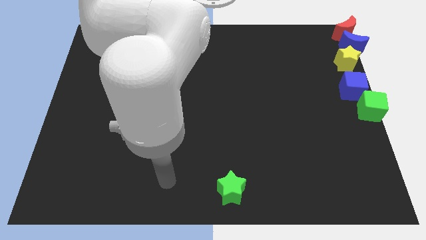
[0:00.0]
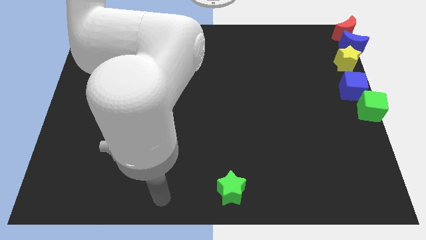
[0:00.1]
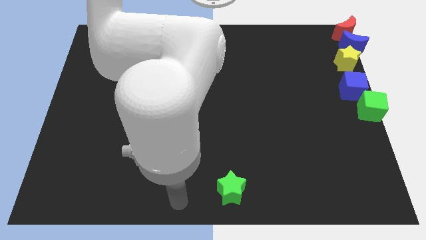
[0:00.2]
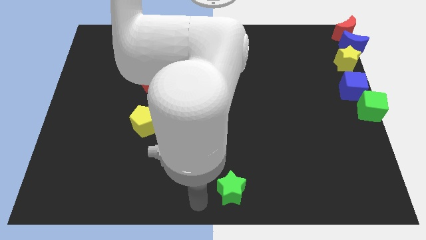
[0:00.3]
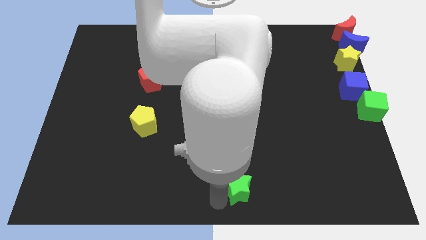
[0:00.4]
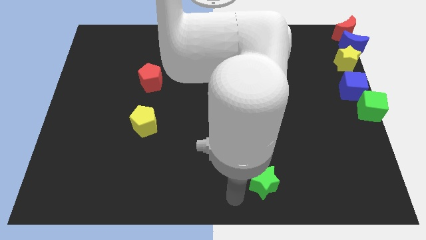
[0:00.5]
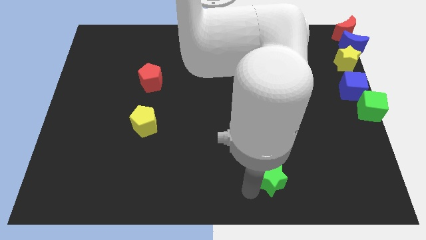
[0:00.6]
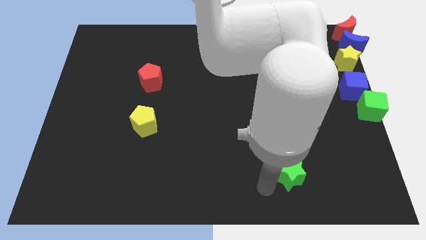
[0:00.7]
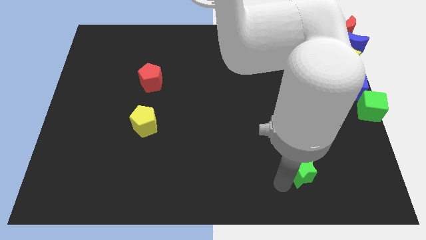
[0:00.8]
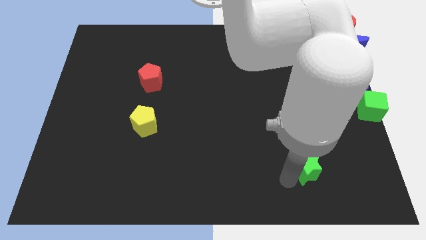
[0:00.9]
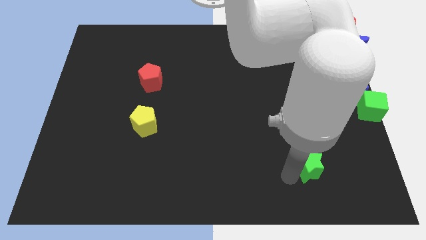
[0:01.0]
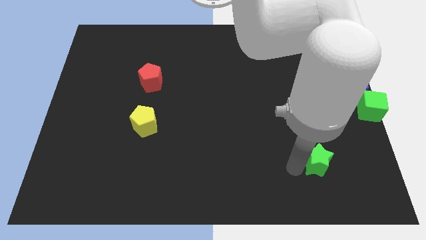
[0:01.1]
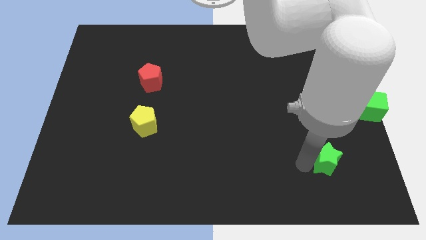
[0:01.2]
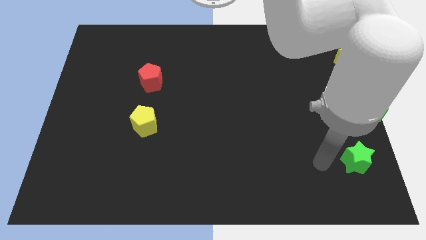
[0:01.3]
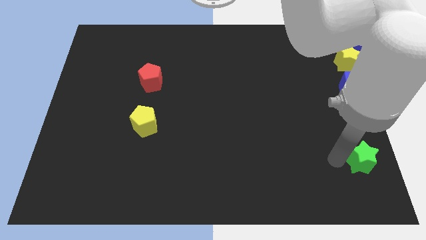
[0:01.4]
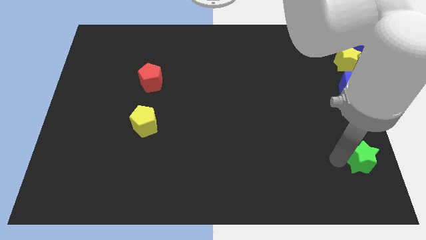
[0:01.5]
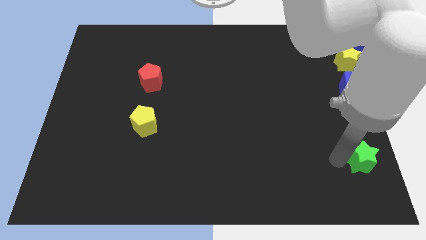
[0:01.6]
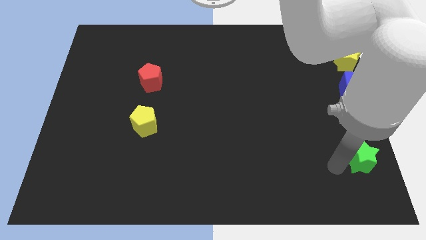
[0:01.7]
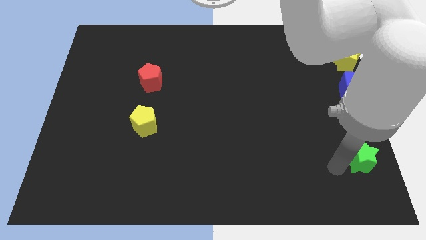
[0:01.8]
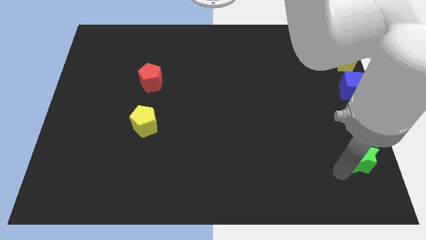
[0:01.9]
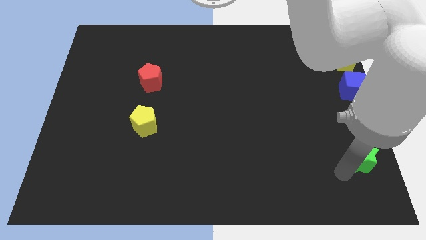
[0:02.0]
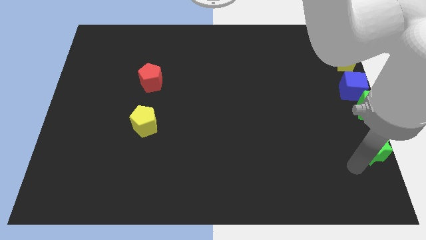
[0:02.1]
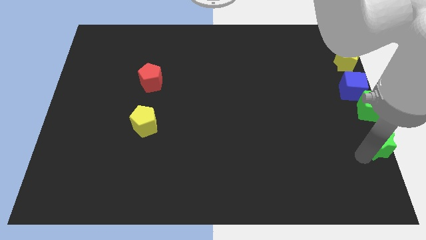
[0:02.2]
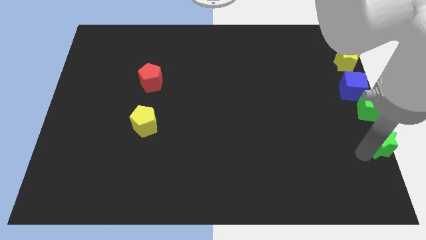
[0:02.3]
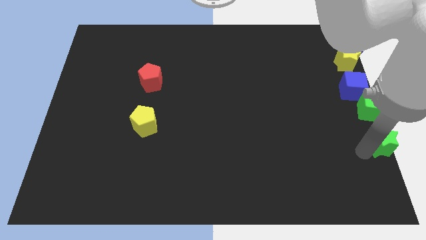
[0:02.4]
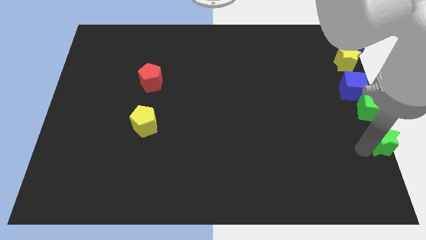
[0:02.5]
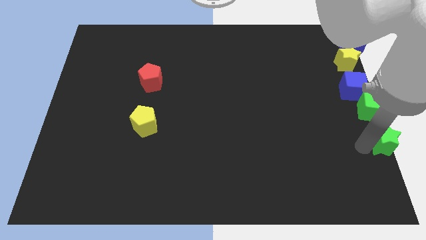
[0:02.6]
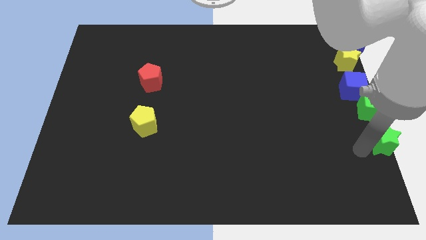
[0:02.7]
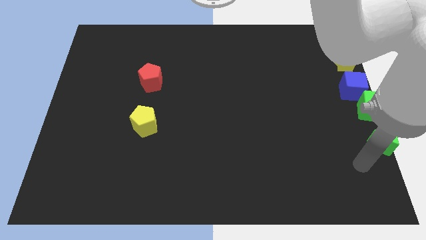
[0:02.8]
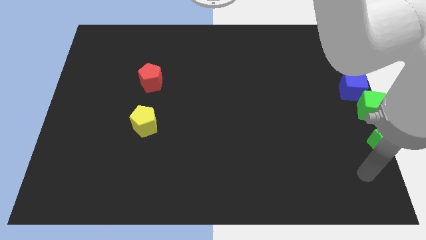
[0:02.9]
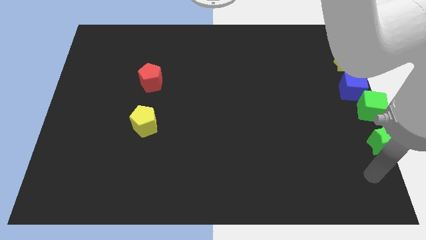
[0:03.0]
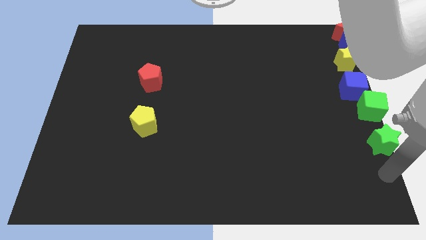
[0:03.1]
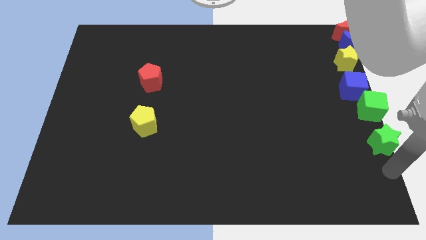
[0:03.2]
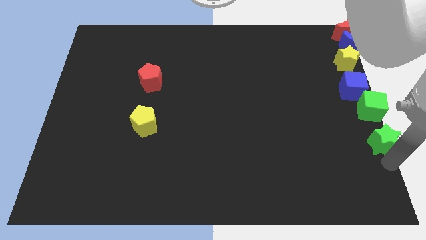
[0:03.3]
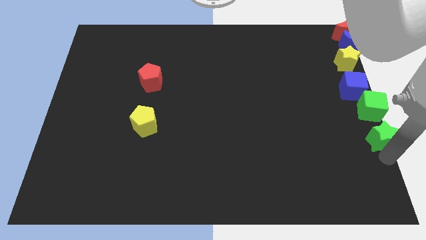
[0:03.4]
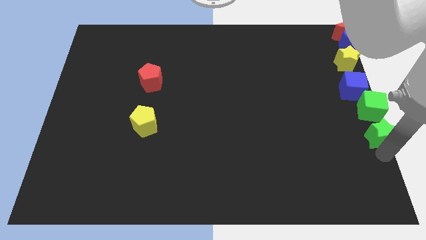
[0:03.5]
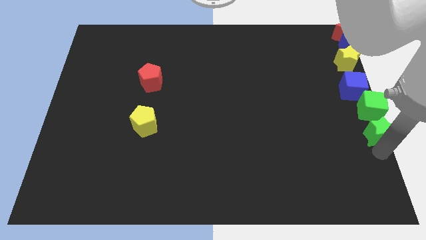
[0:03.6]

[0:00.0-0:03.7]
place green star below green cube

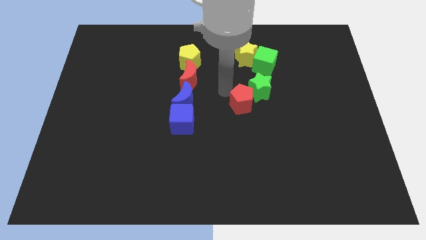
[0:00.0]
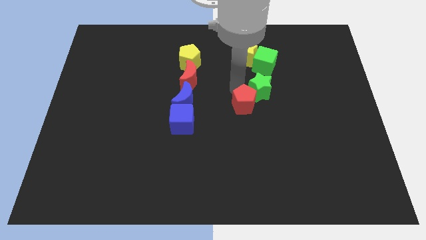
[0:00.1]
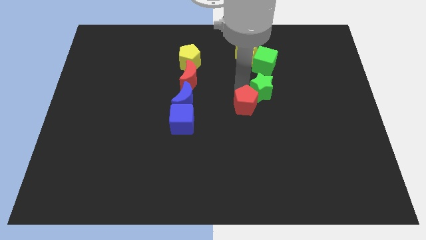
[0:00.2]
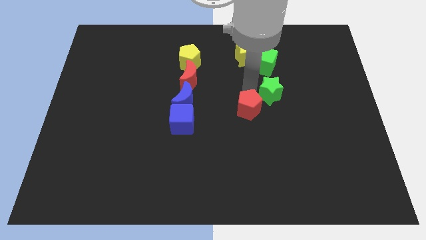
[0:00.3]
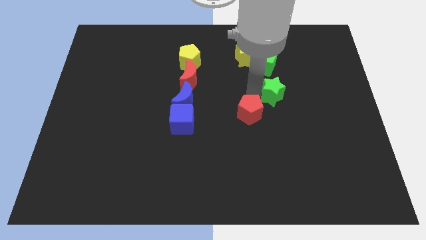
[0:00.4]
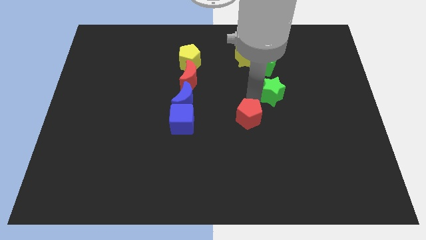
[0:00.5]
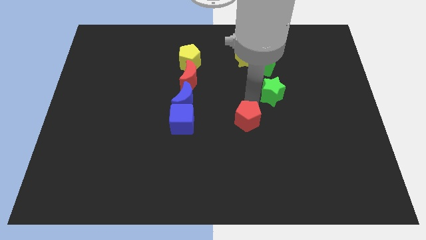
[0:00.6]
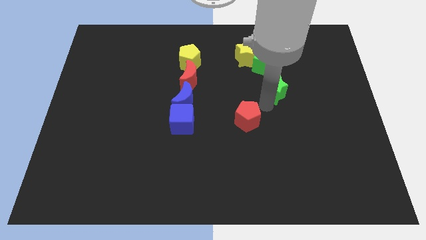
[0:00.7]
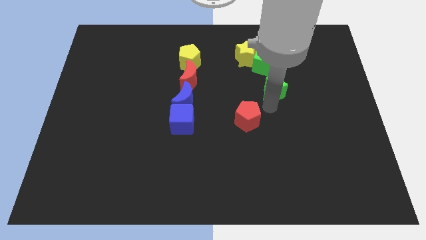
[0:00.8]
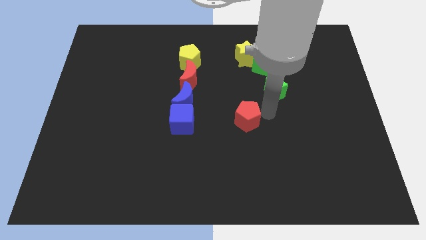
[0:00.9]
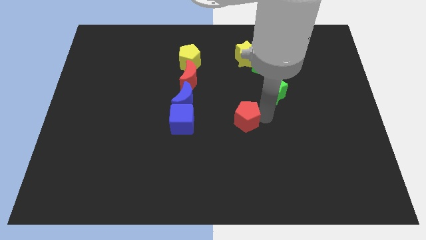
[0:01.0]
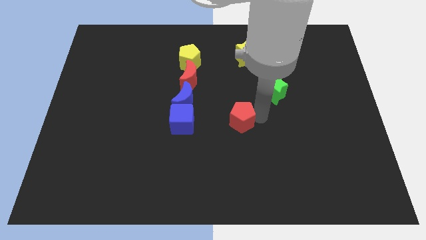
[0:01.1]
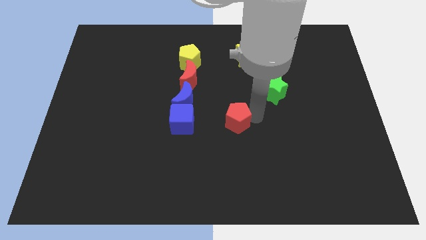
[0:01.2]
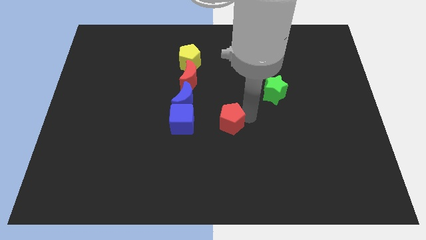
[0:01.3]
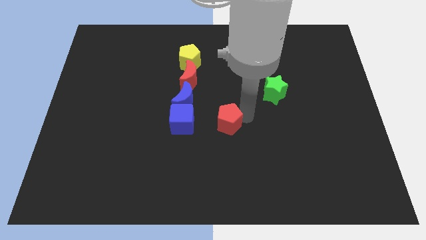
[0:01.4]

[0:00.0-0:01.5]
separate the red pentagon from the green star

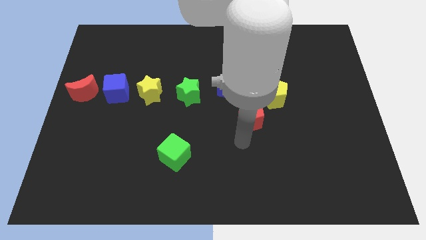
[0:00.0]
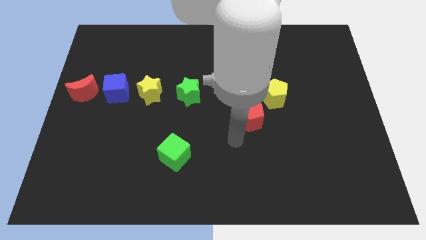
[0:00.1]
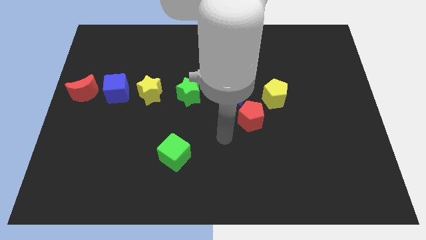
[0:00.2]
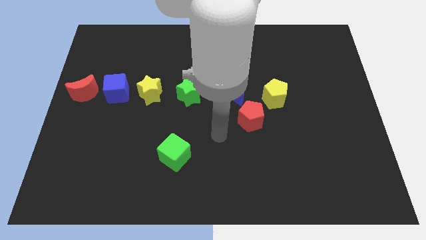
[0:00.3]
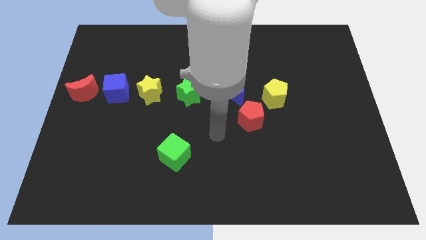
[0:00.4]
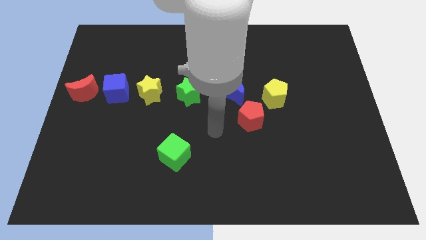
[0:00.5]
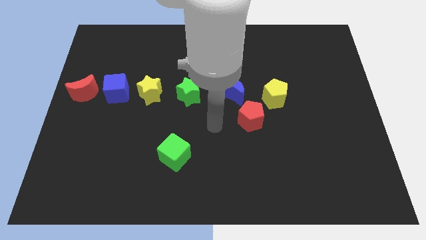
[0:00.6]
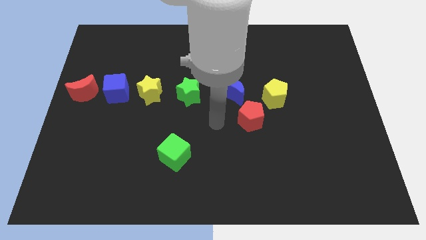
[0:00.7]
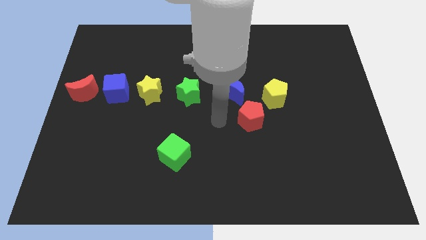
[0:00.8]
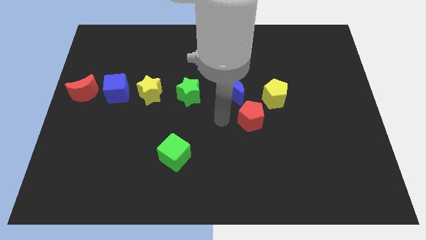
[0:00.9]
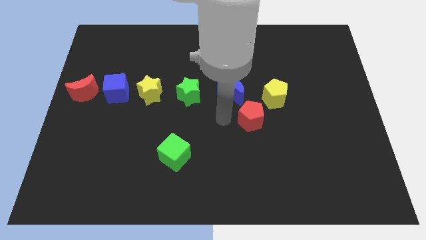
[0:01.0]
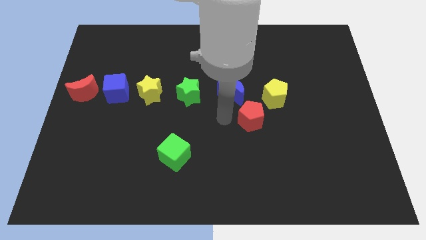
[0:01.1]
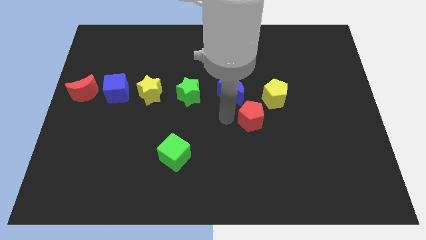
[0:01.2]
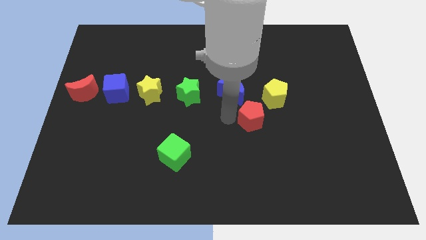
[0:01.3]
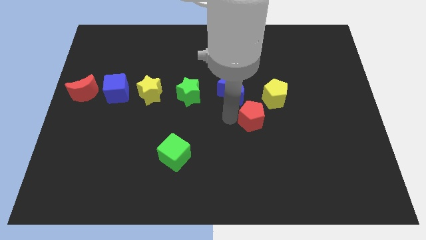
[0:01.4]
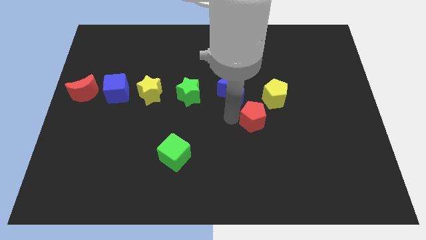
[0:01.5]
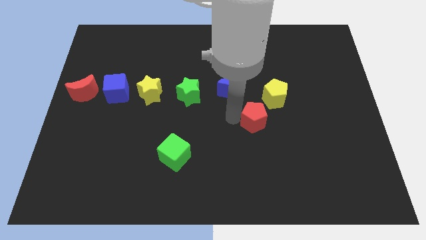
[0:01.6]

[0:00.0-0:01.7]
touch the red pentagon with your arm

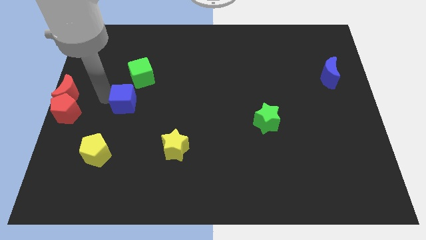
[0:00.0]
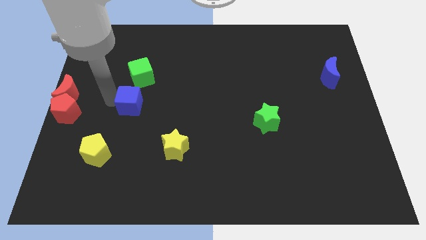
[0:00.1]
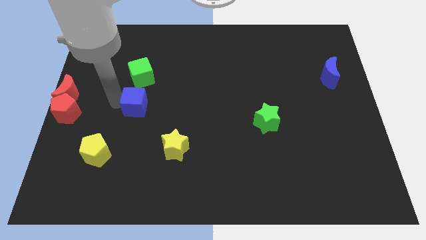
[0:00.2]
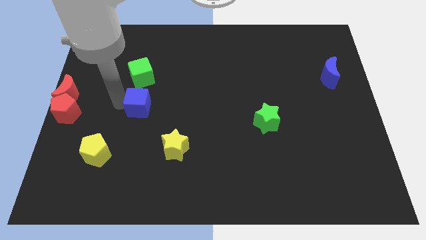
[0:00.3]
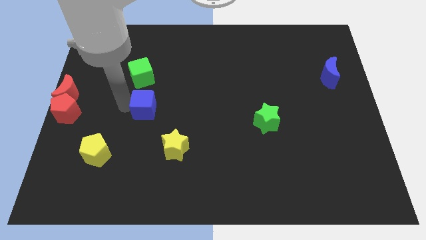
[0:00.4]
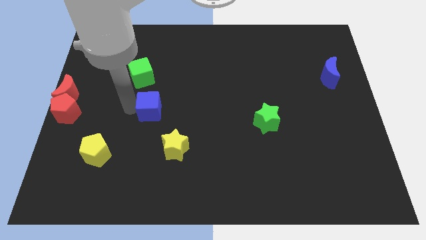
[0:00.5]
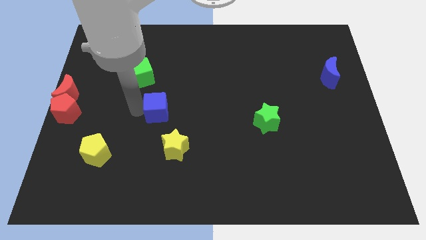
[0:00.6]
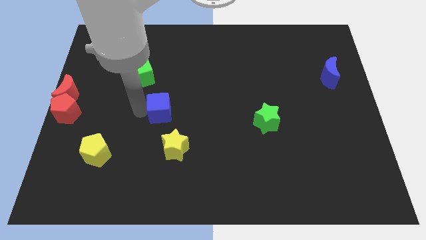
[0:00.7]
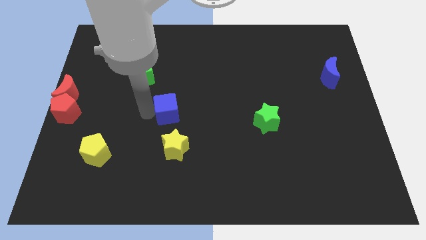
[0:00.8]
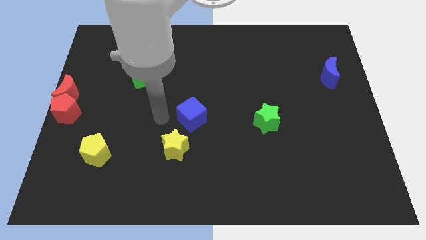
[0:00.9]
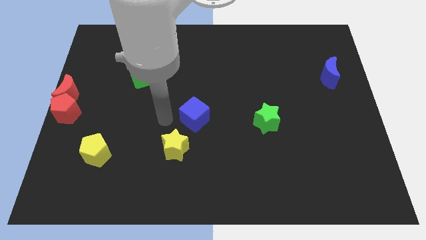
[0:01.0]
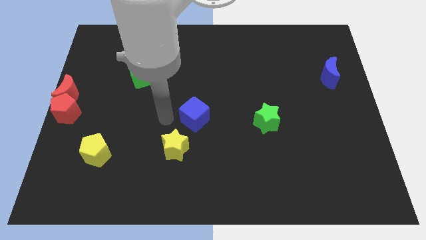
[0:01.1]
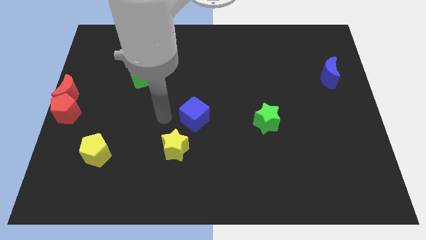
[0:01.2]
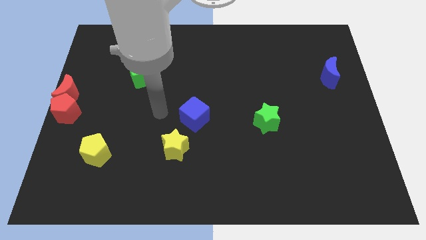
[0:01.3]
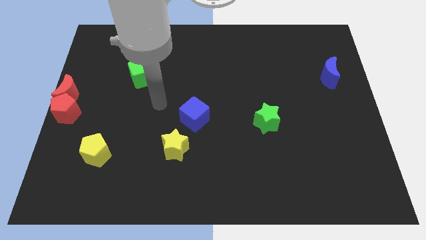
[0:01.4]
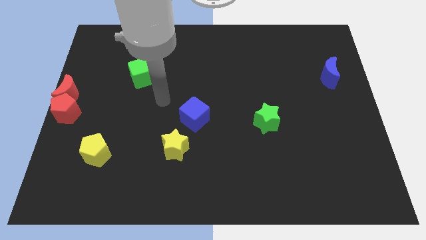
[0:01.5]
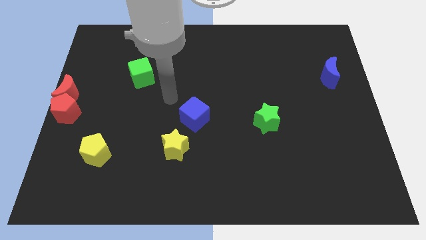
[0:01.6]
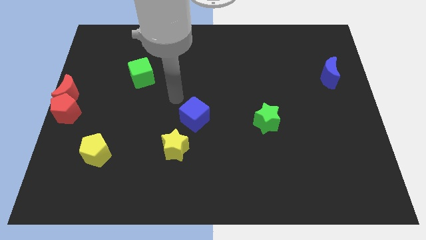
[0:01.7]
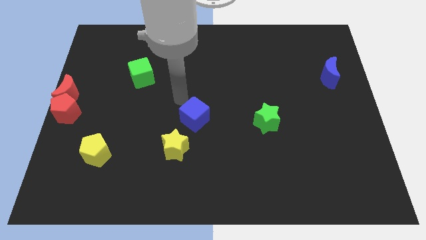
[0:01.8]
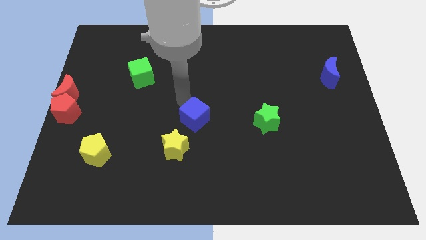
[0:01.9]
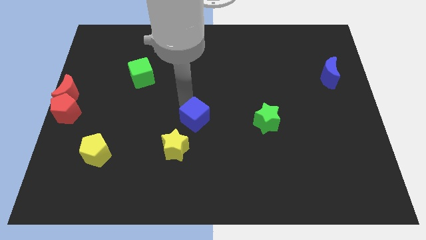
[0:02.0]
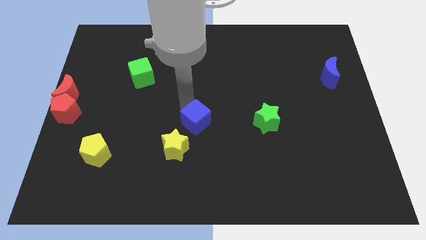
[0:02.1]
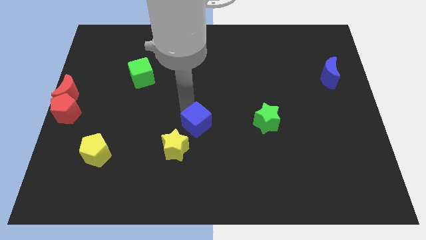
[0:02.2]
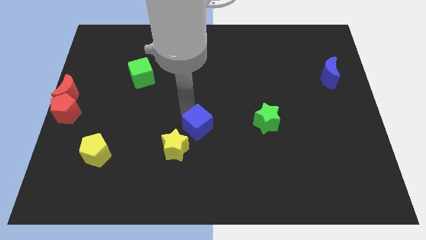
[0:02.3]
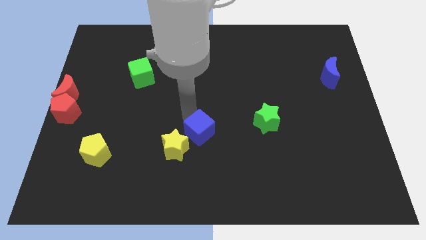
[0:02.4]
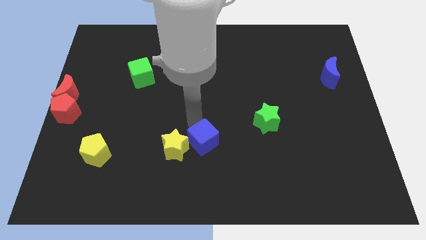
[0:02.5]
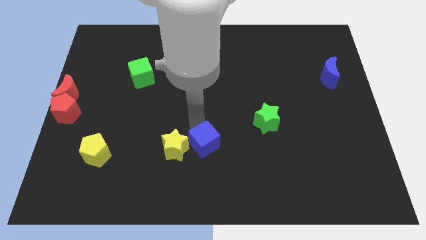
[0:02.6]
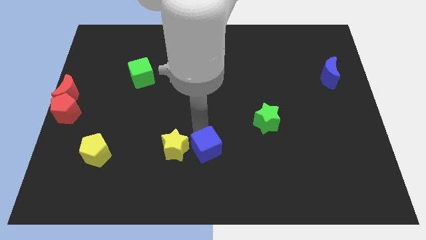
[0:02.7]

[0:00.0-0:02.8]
move the blue cube right beside the yellow star
